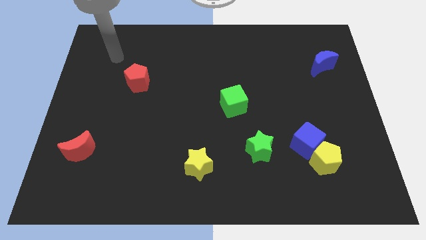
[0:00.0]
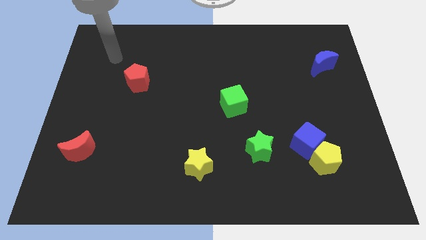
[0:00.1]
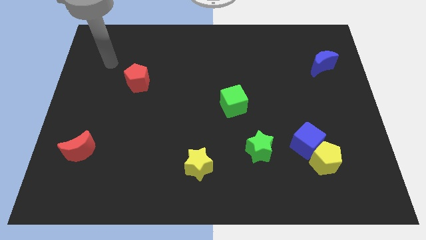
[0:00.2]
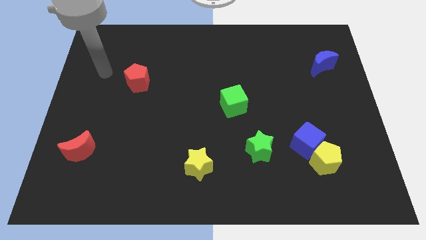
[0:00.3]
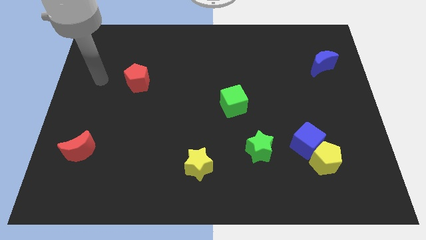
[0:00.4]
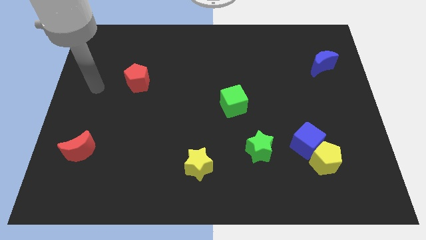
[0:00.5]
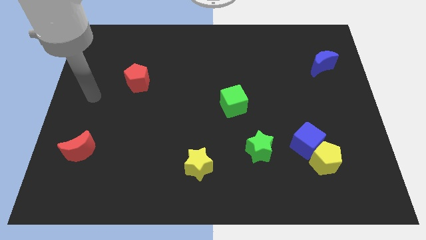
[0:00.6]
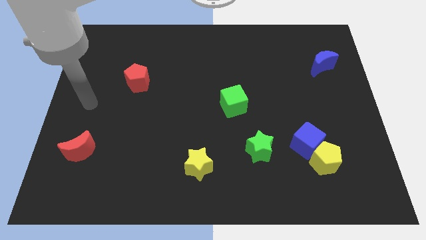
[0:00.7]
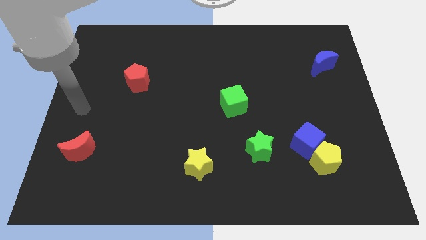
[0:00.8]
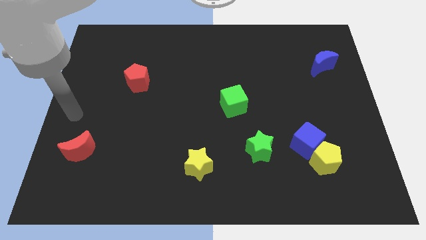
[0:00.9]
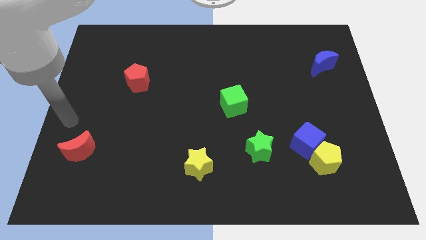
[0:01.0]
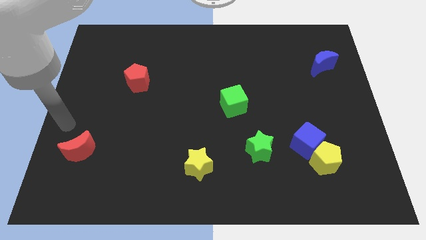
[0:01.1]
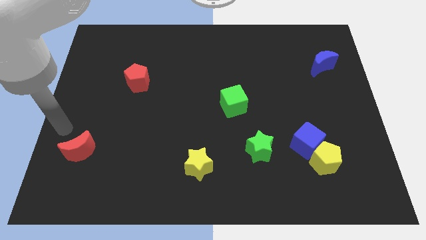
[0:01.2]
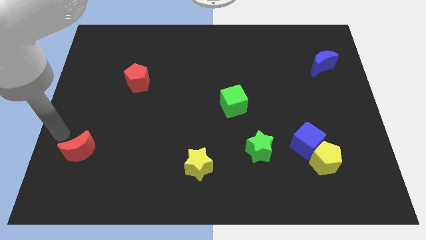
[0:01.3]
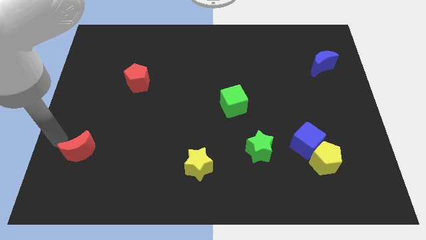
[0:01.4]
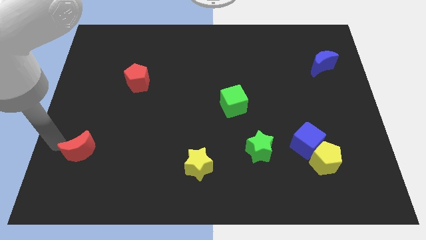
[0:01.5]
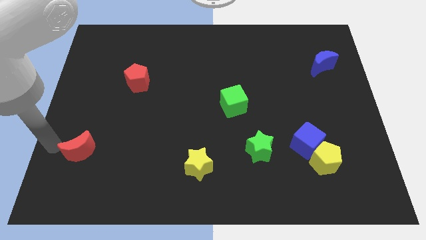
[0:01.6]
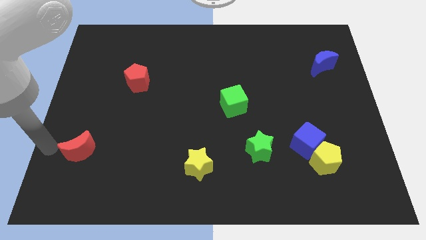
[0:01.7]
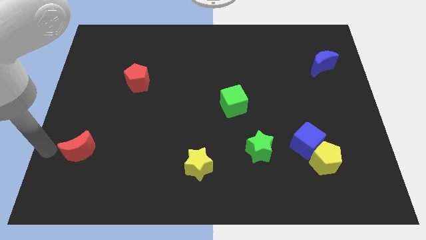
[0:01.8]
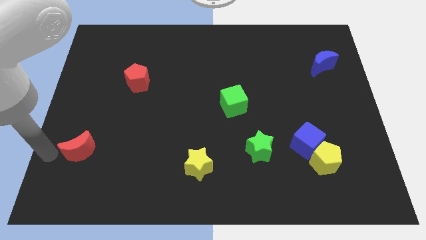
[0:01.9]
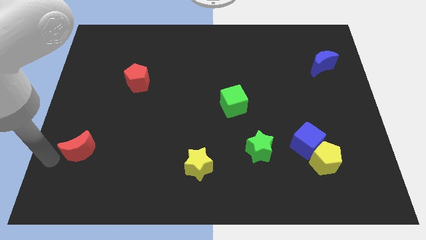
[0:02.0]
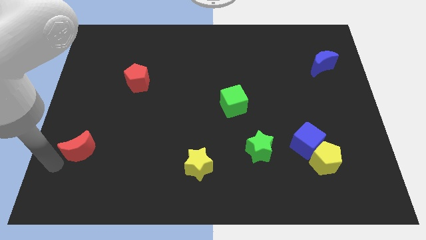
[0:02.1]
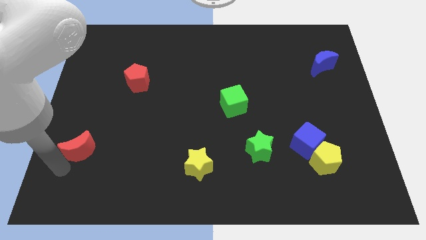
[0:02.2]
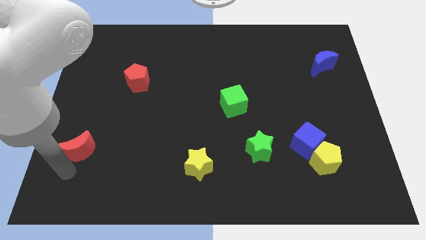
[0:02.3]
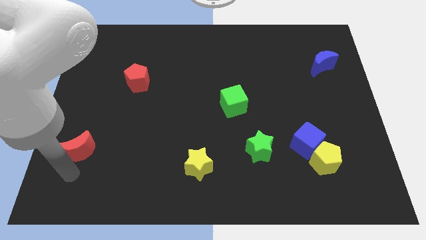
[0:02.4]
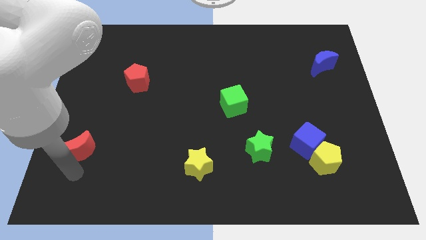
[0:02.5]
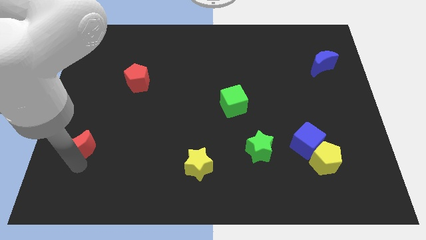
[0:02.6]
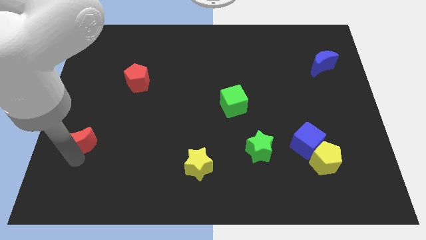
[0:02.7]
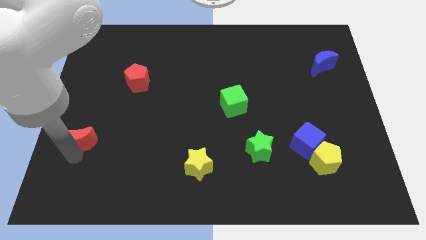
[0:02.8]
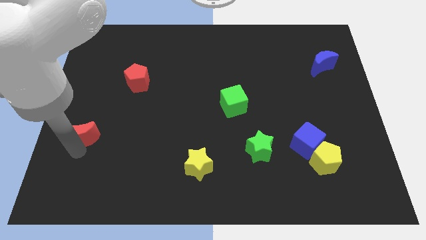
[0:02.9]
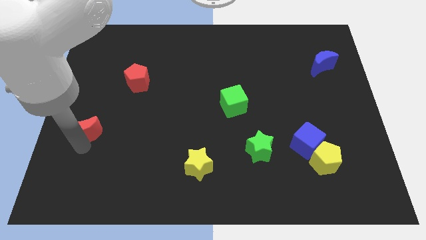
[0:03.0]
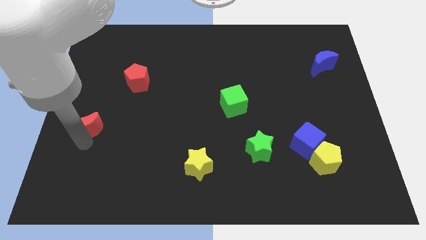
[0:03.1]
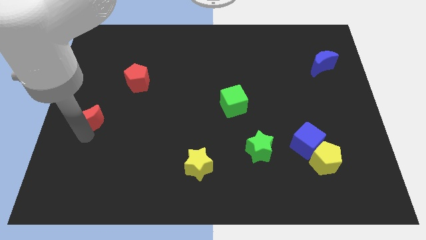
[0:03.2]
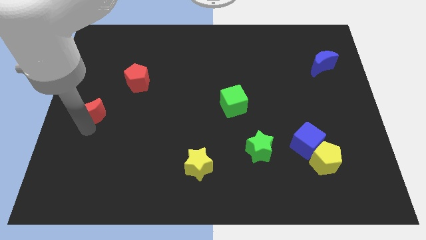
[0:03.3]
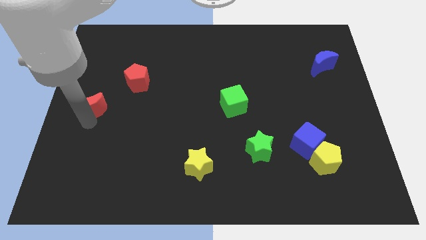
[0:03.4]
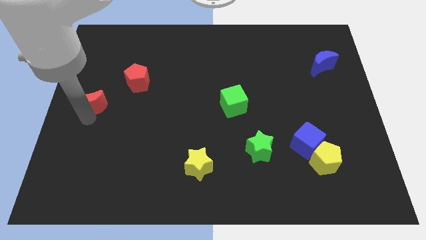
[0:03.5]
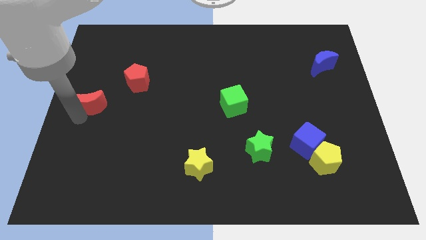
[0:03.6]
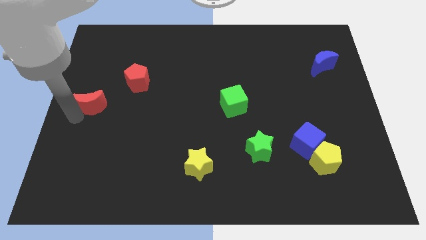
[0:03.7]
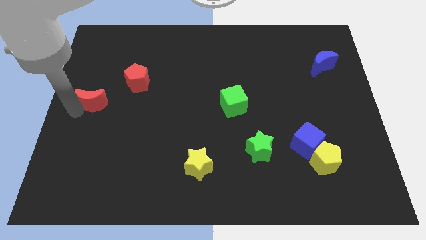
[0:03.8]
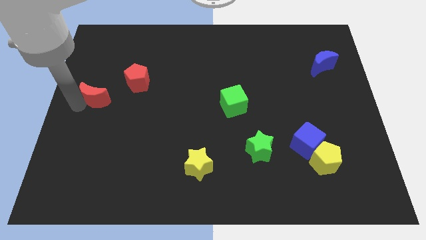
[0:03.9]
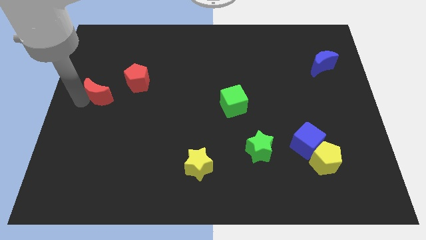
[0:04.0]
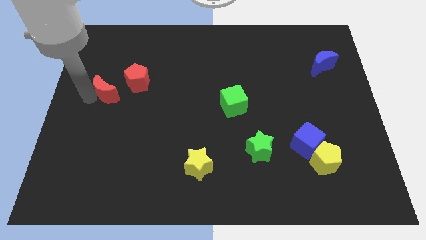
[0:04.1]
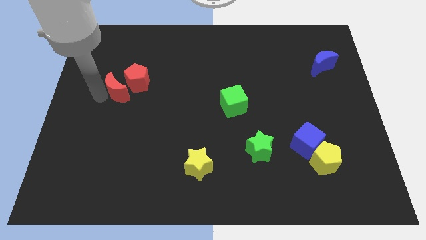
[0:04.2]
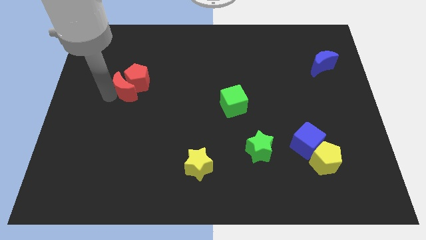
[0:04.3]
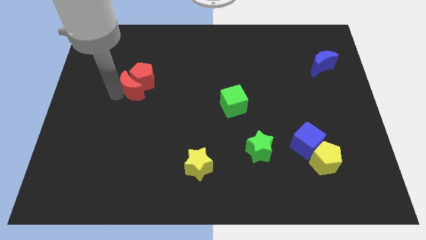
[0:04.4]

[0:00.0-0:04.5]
push red crescent into the red pentagon

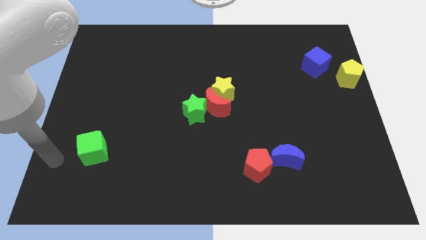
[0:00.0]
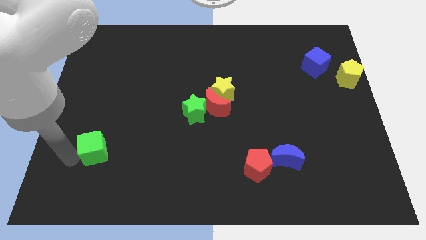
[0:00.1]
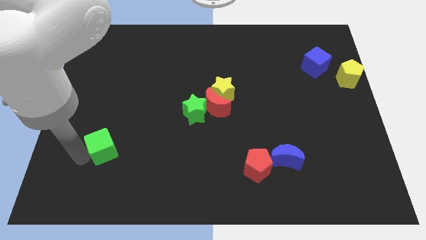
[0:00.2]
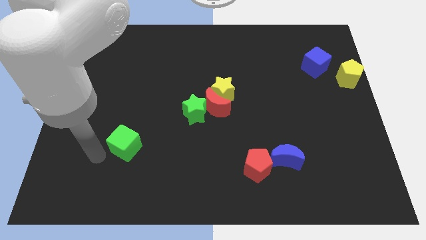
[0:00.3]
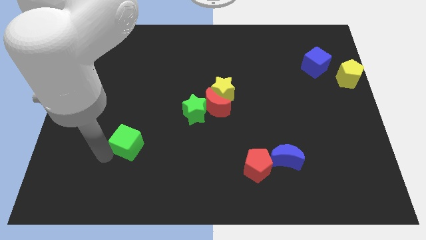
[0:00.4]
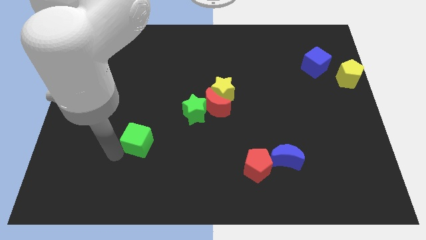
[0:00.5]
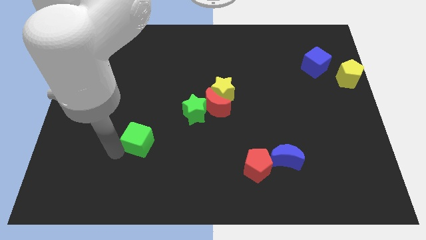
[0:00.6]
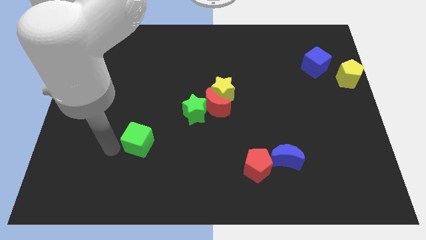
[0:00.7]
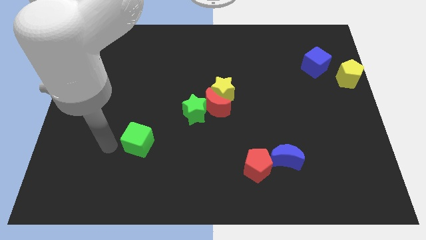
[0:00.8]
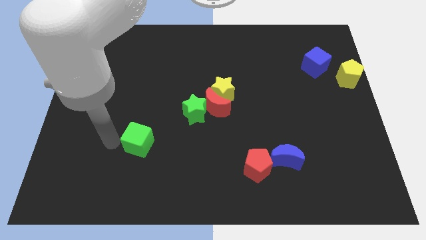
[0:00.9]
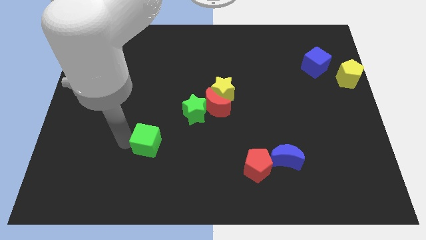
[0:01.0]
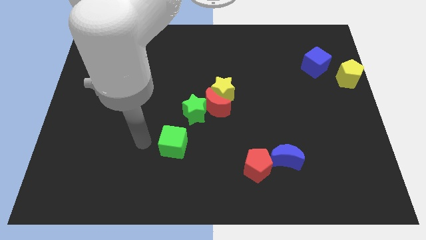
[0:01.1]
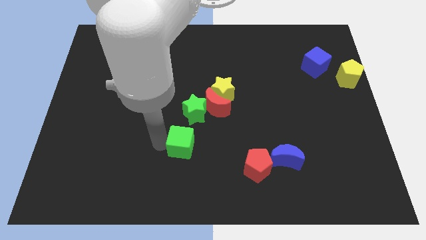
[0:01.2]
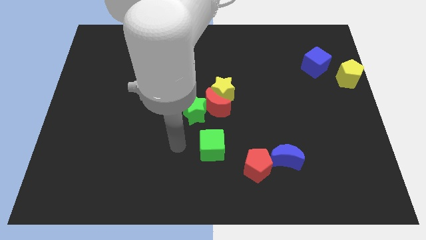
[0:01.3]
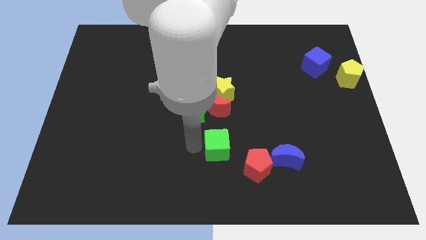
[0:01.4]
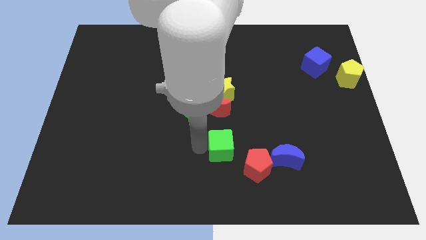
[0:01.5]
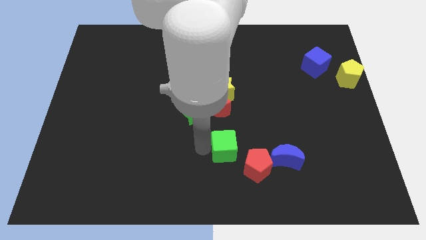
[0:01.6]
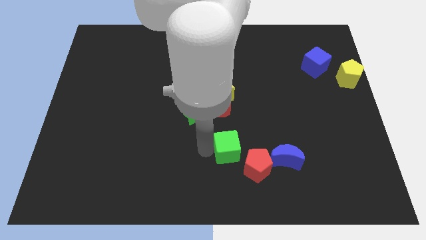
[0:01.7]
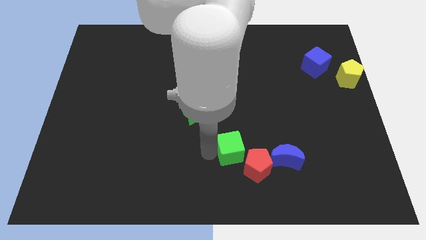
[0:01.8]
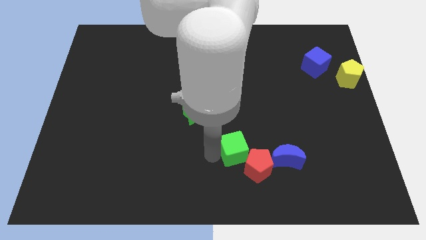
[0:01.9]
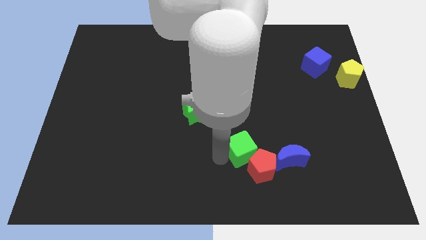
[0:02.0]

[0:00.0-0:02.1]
move the green cube into the red pentagon

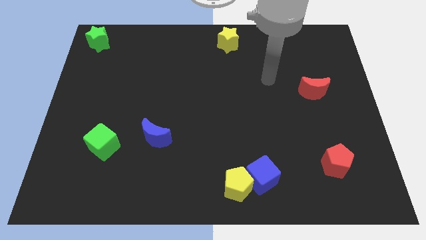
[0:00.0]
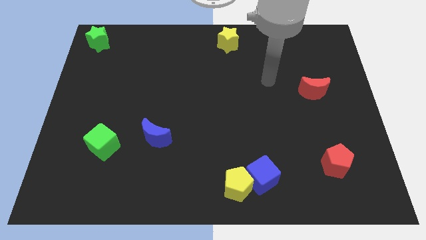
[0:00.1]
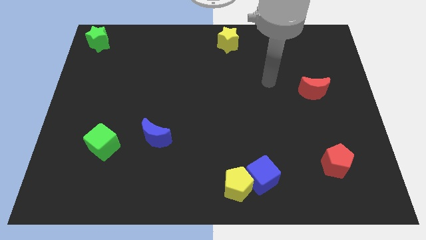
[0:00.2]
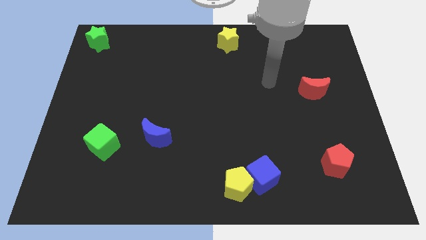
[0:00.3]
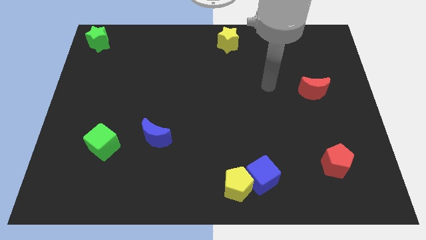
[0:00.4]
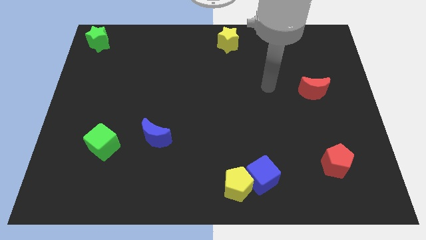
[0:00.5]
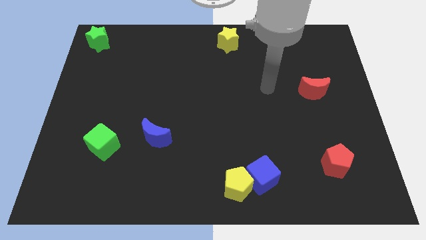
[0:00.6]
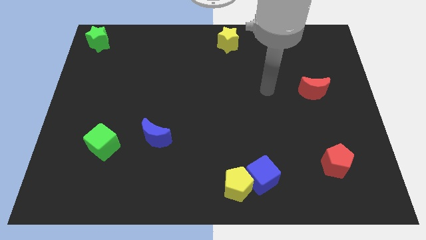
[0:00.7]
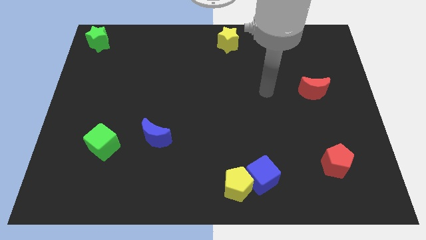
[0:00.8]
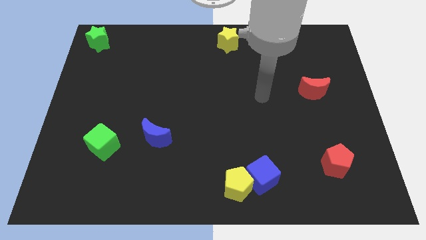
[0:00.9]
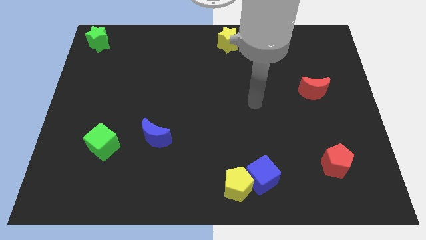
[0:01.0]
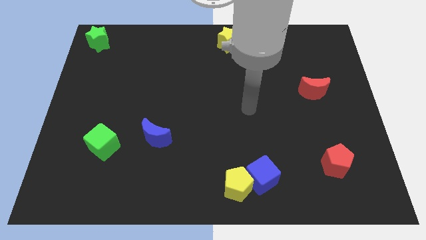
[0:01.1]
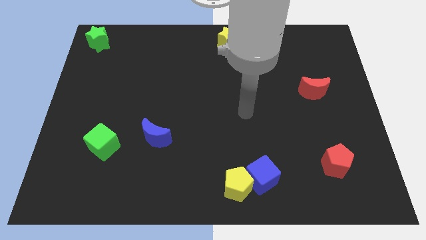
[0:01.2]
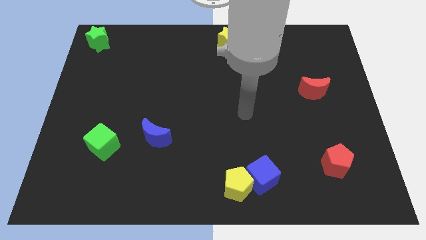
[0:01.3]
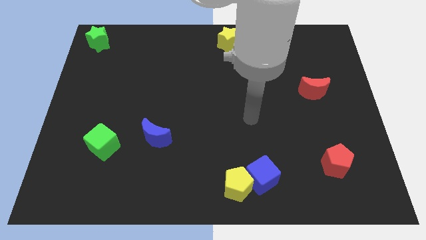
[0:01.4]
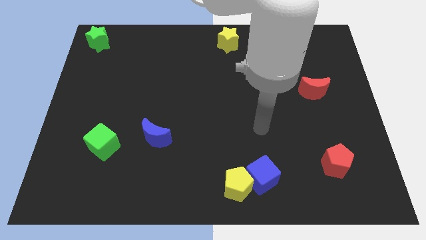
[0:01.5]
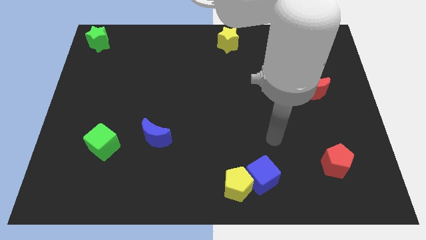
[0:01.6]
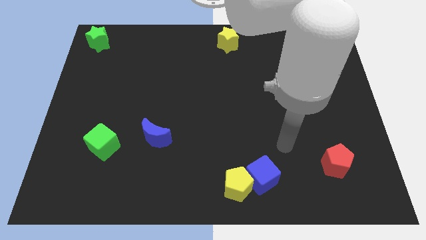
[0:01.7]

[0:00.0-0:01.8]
point your arm at the top right side of the blue cube

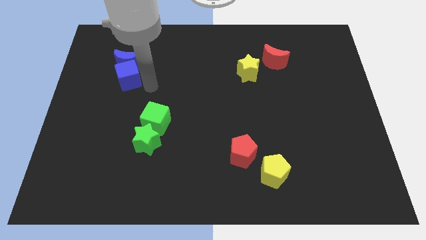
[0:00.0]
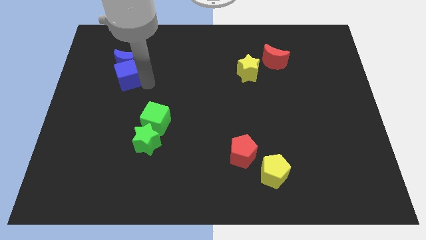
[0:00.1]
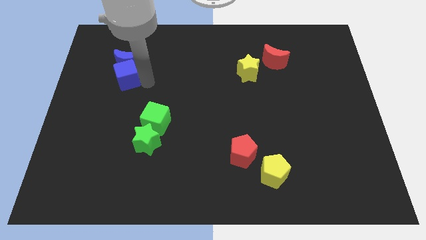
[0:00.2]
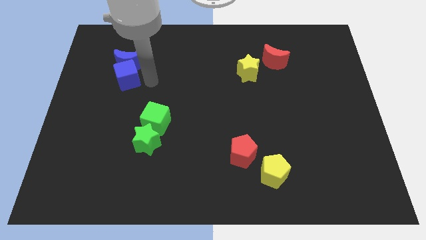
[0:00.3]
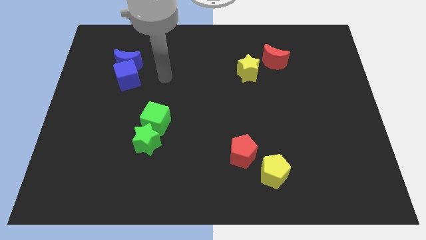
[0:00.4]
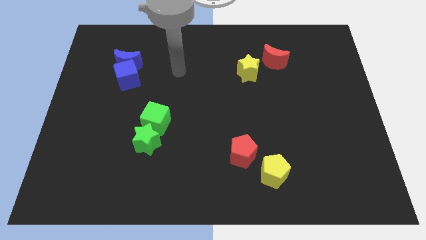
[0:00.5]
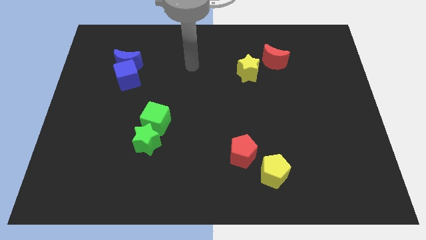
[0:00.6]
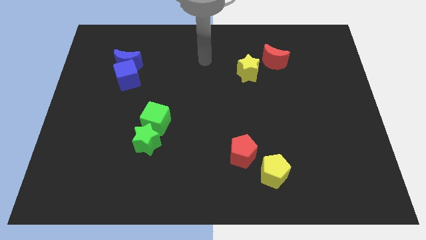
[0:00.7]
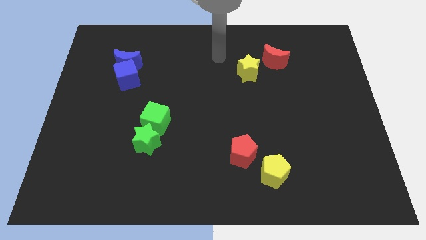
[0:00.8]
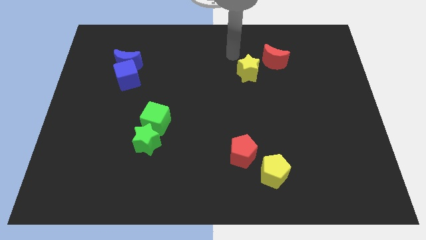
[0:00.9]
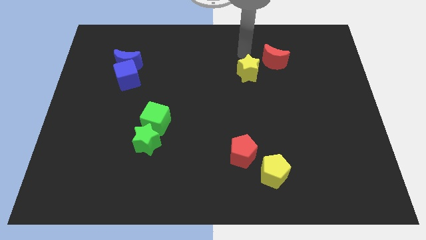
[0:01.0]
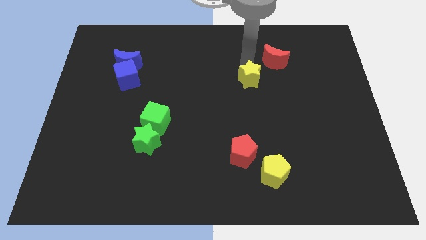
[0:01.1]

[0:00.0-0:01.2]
point the arm to the top of the yellow star
